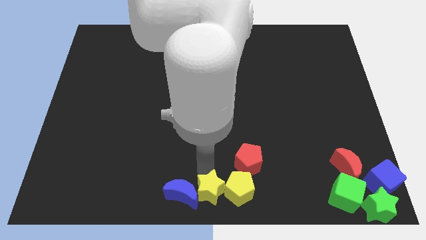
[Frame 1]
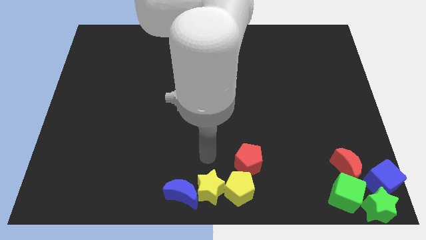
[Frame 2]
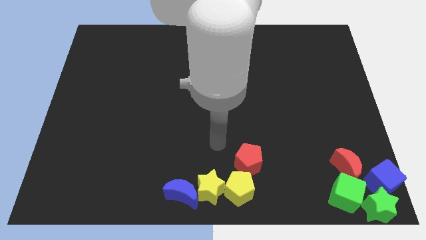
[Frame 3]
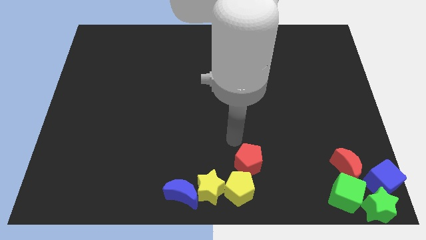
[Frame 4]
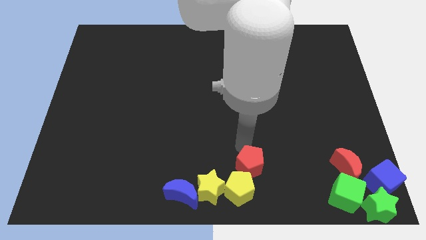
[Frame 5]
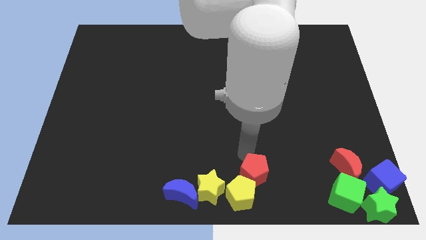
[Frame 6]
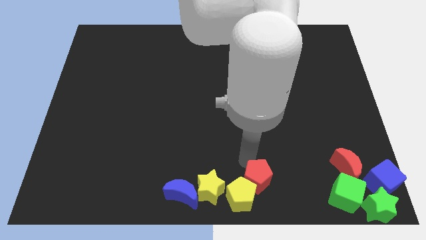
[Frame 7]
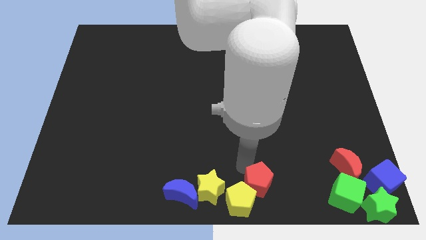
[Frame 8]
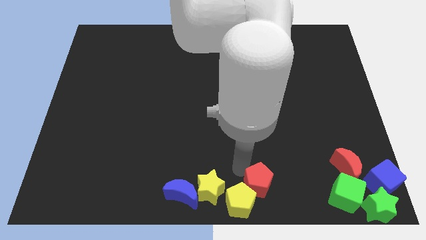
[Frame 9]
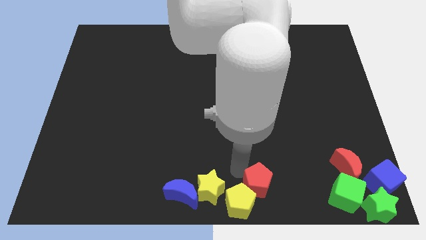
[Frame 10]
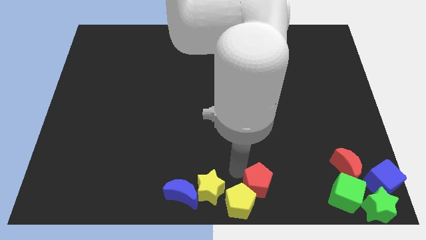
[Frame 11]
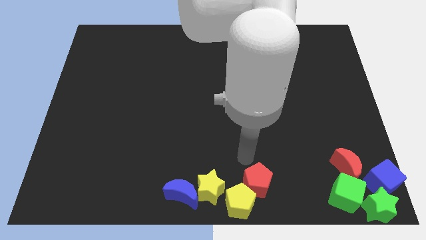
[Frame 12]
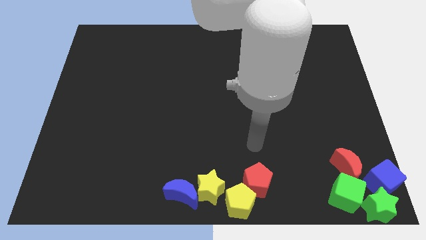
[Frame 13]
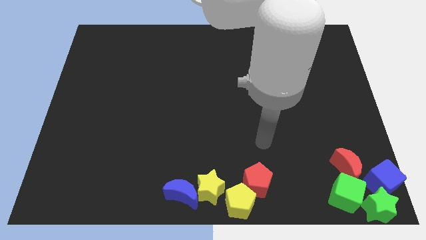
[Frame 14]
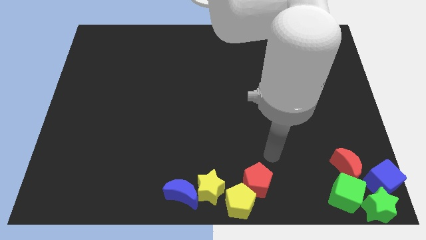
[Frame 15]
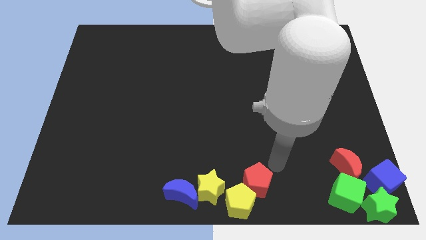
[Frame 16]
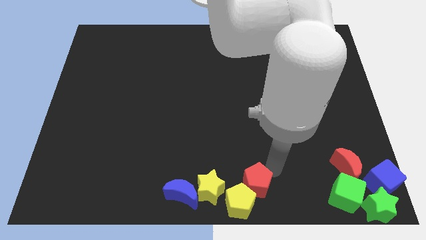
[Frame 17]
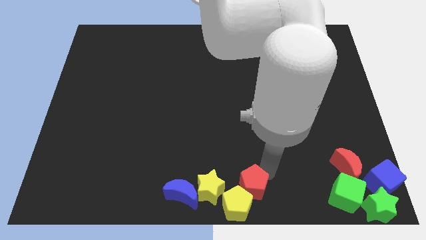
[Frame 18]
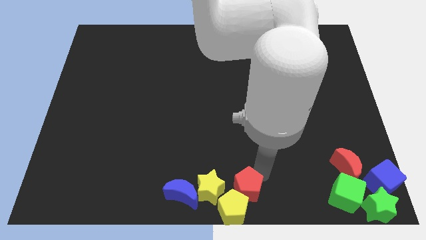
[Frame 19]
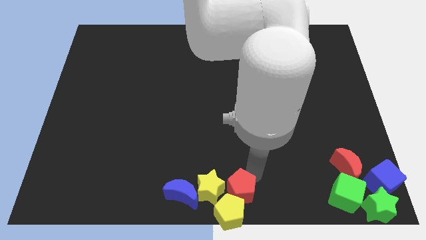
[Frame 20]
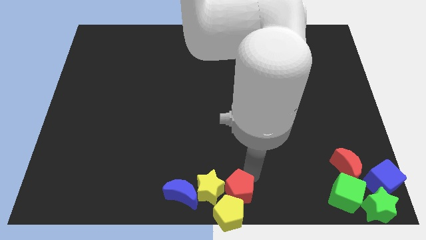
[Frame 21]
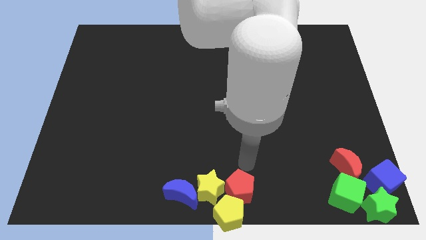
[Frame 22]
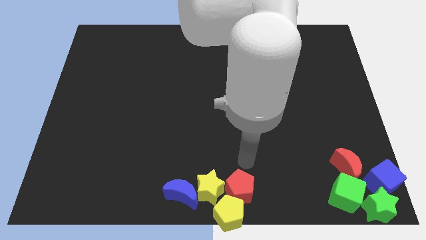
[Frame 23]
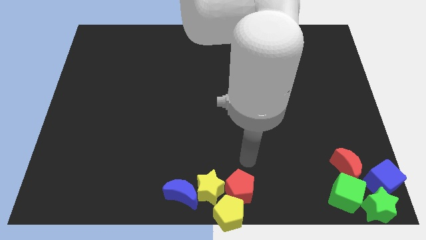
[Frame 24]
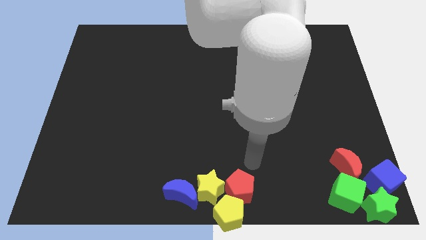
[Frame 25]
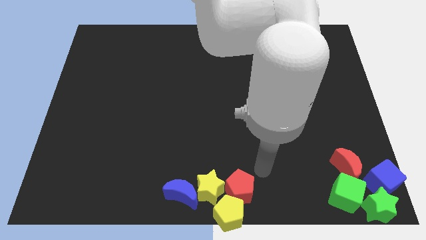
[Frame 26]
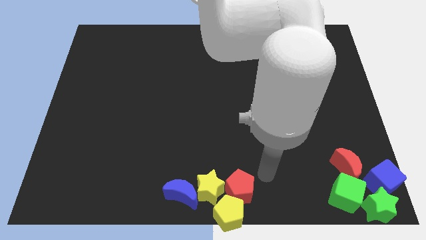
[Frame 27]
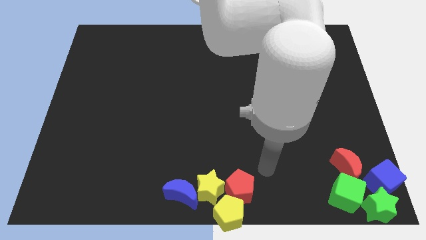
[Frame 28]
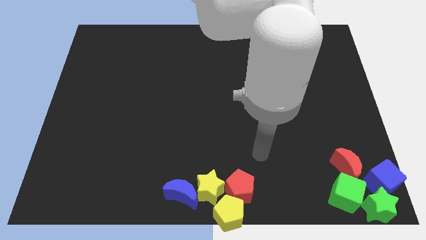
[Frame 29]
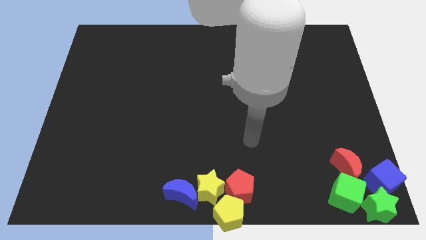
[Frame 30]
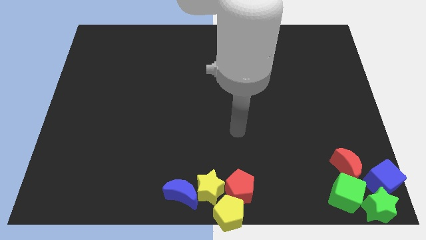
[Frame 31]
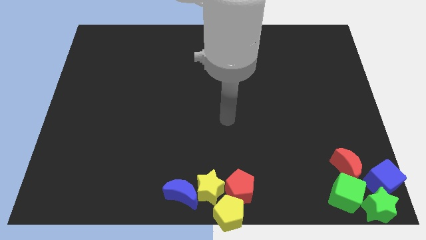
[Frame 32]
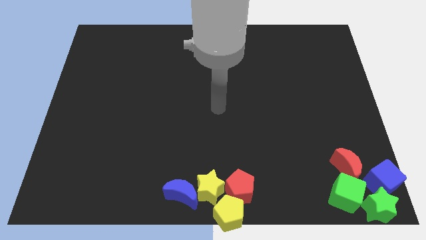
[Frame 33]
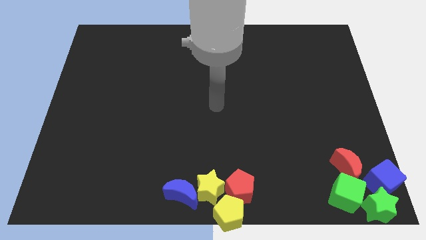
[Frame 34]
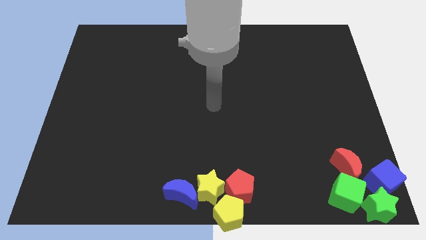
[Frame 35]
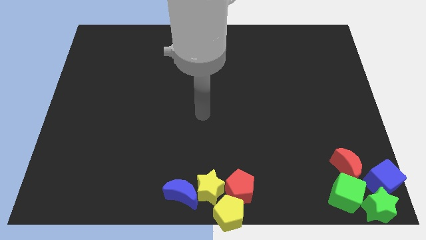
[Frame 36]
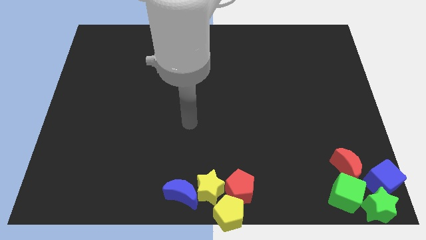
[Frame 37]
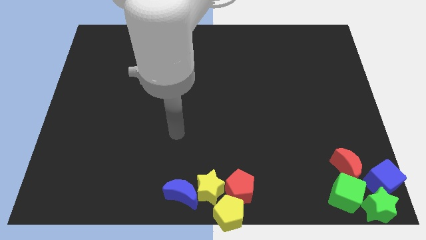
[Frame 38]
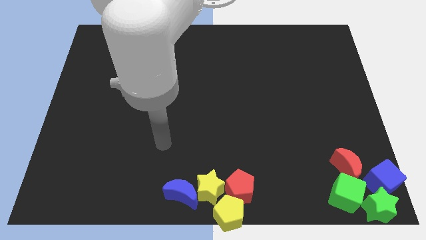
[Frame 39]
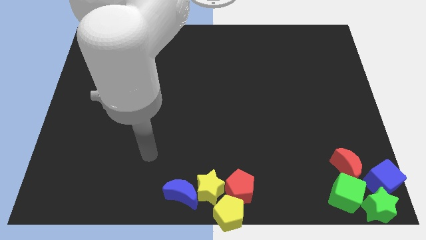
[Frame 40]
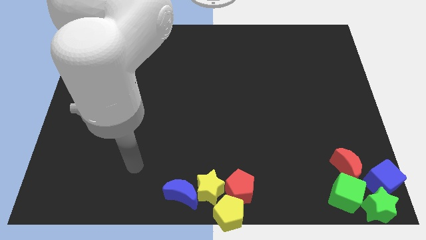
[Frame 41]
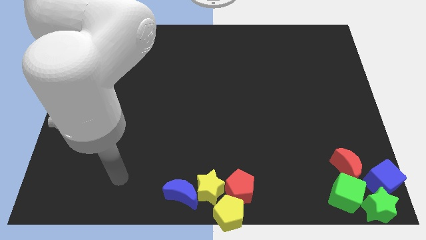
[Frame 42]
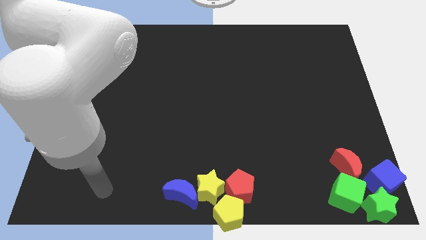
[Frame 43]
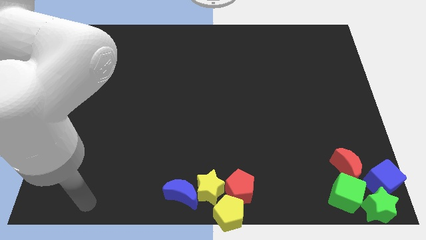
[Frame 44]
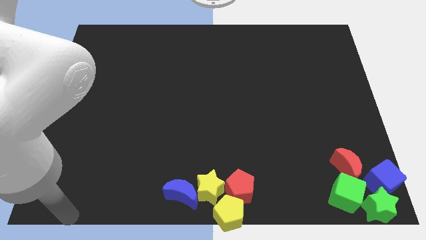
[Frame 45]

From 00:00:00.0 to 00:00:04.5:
adjust the yellow blocks red pentagon and the blue crescent at the bottom center of the board

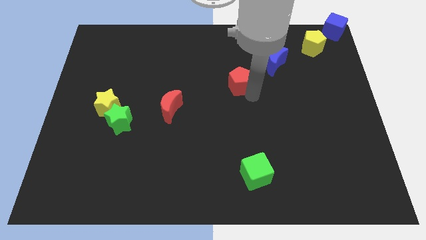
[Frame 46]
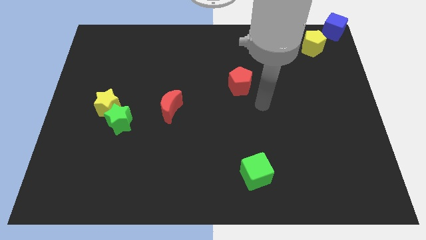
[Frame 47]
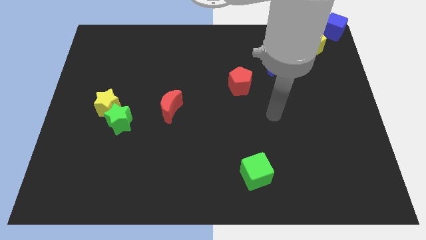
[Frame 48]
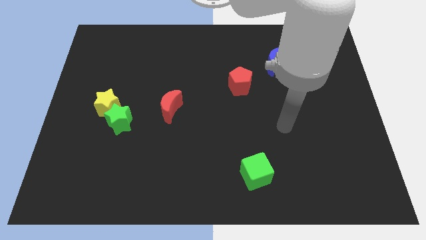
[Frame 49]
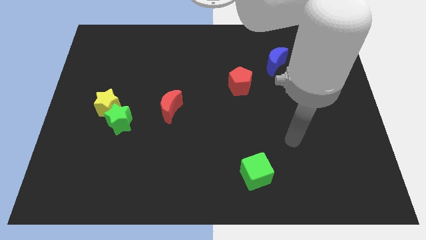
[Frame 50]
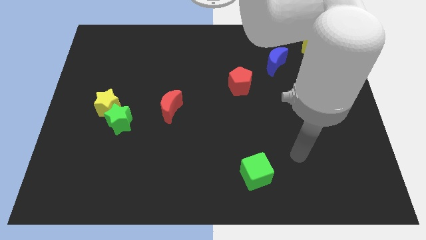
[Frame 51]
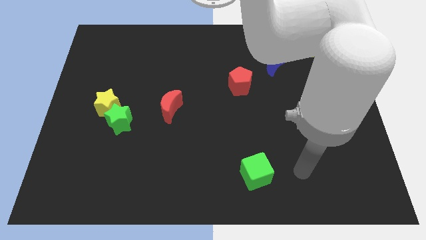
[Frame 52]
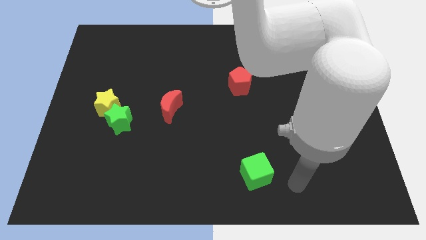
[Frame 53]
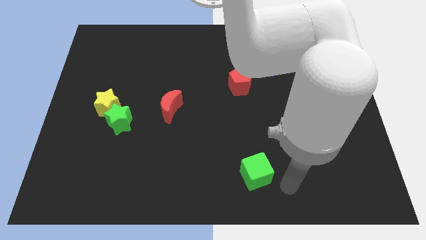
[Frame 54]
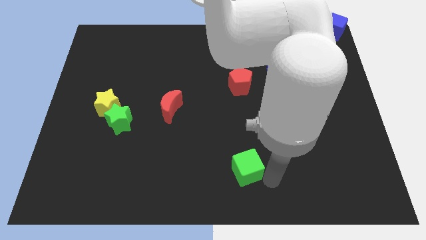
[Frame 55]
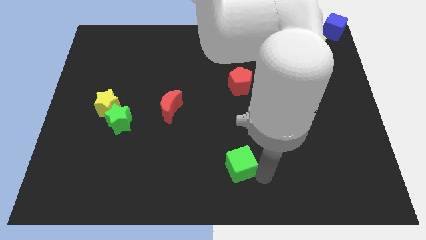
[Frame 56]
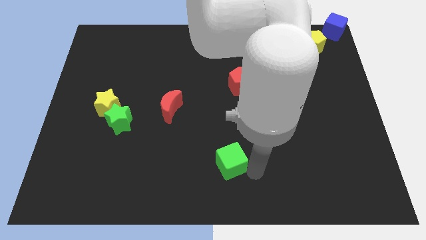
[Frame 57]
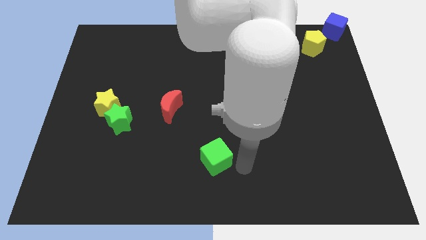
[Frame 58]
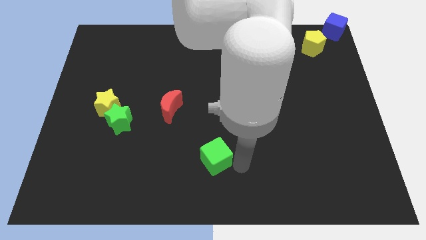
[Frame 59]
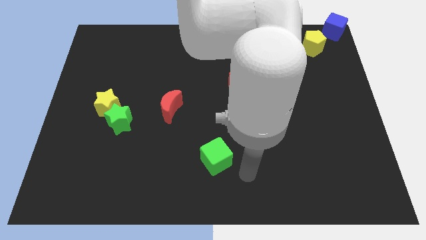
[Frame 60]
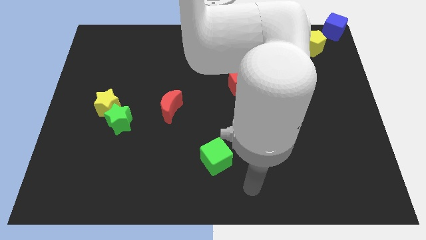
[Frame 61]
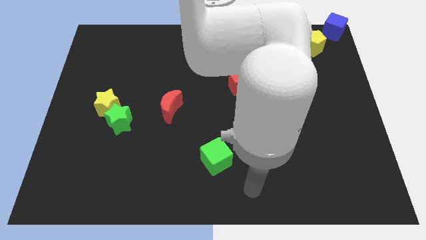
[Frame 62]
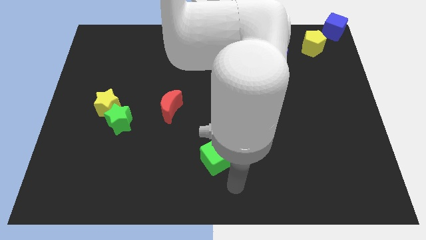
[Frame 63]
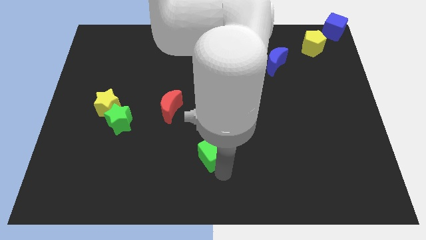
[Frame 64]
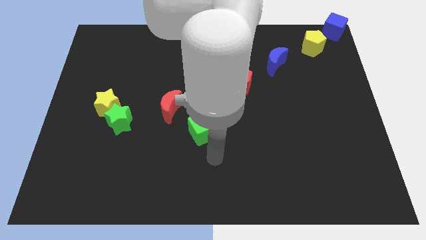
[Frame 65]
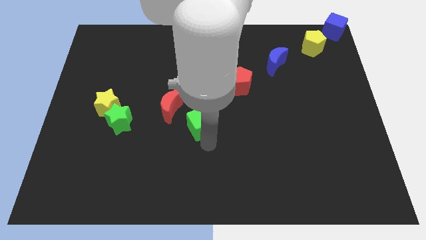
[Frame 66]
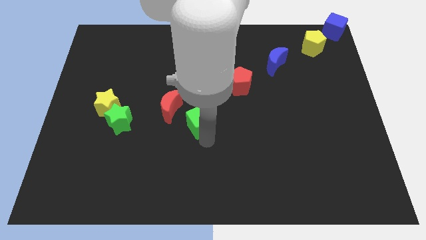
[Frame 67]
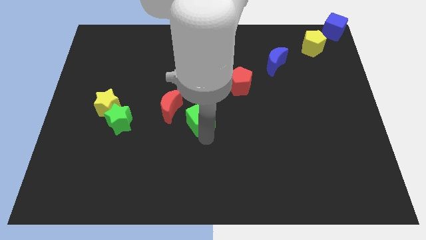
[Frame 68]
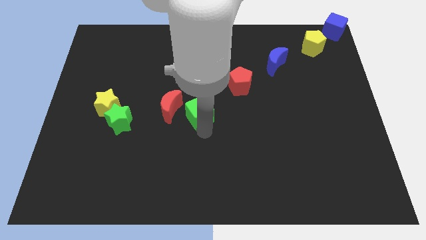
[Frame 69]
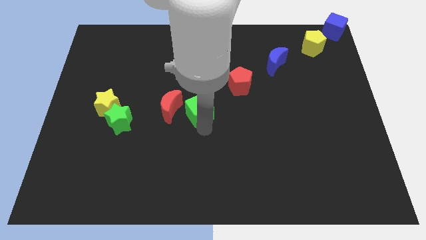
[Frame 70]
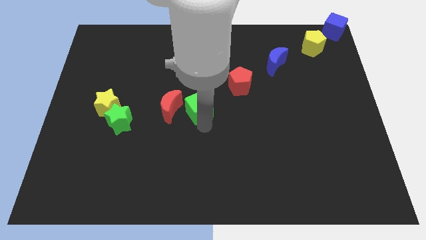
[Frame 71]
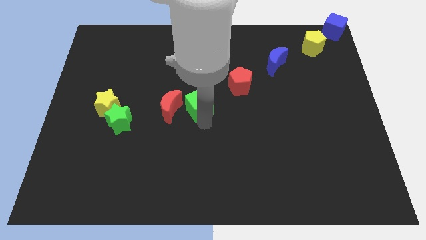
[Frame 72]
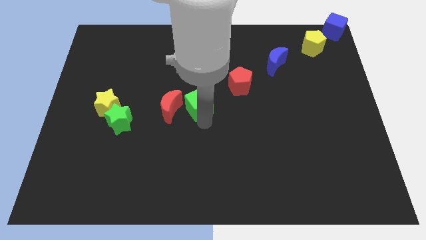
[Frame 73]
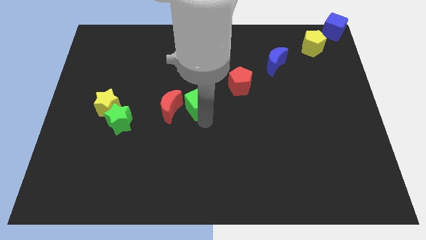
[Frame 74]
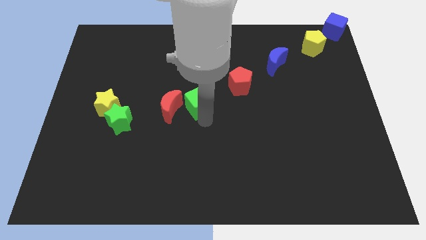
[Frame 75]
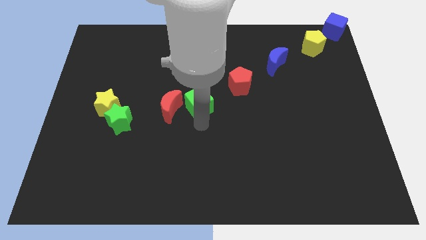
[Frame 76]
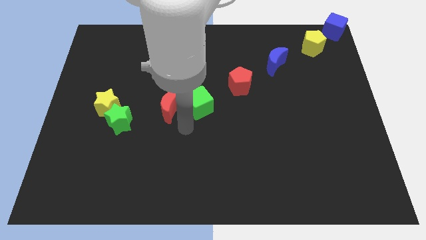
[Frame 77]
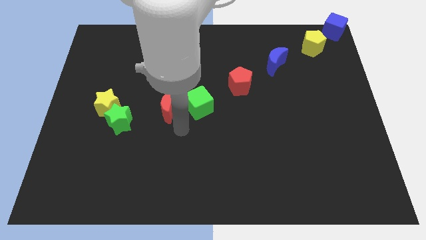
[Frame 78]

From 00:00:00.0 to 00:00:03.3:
move the green cube towards the right side of the red moon

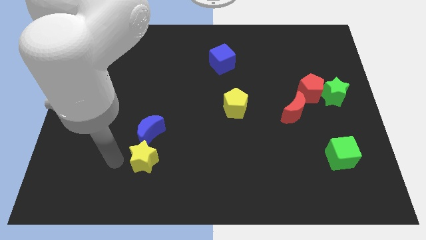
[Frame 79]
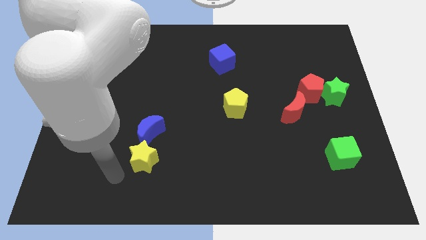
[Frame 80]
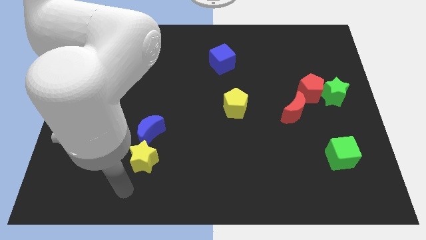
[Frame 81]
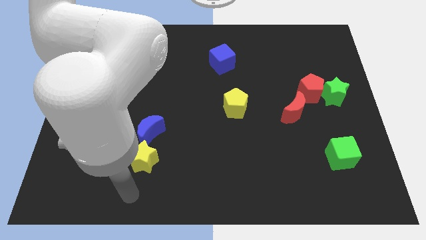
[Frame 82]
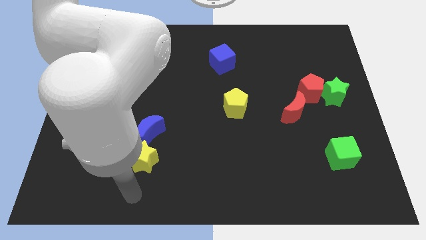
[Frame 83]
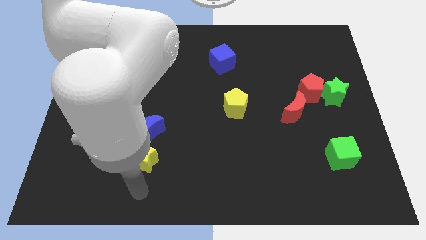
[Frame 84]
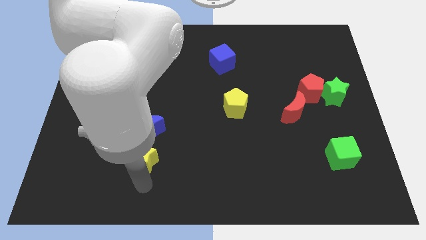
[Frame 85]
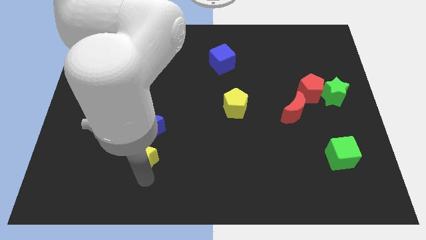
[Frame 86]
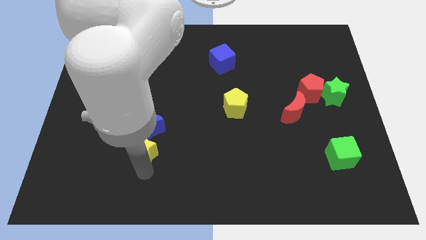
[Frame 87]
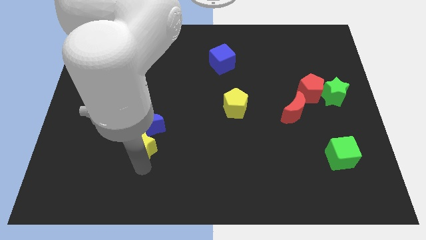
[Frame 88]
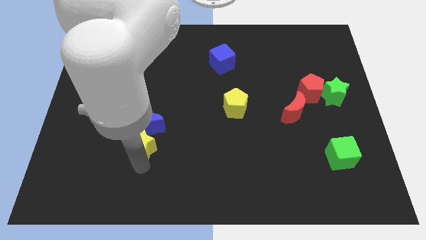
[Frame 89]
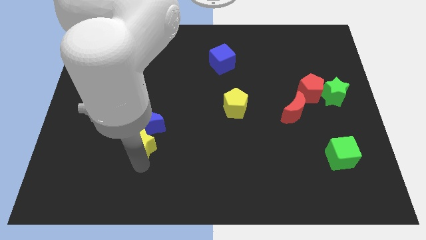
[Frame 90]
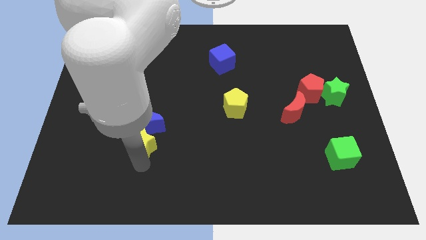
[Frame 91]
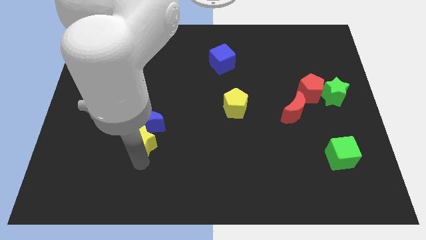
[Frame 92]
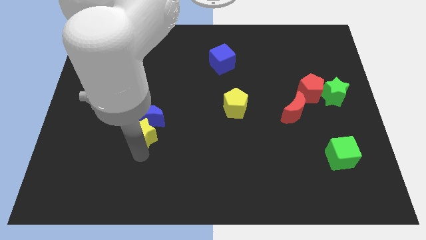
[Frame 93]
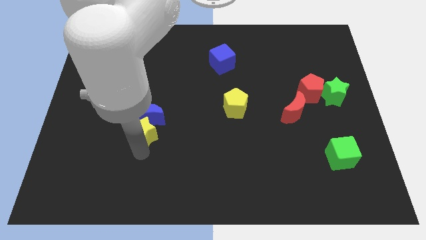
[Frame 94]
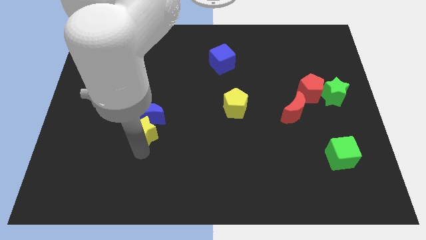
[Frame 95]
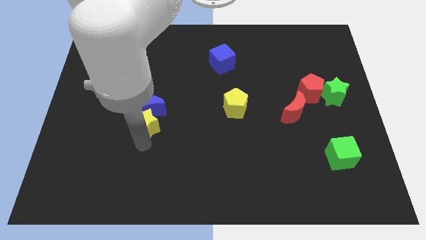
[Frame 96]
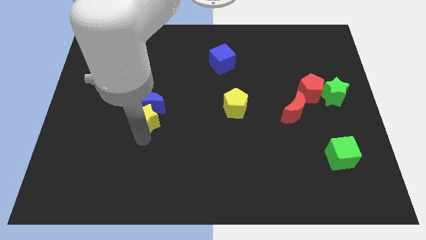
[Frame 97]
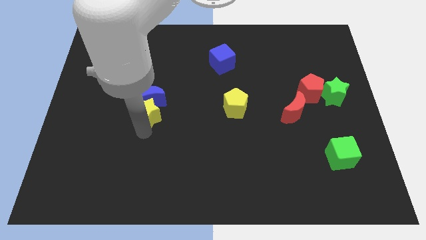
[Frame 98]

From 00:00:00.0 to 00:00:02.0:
push yellow star in to blue crescent
